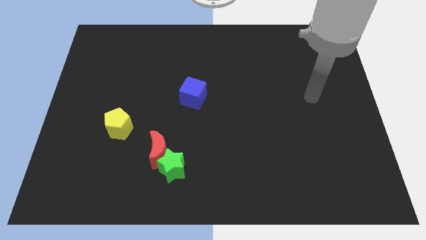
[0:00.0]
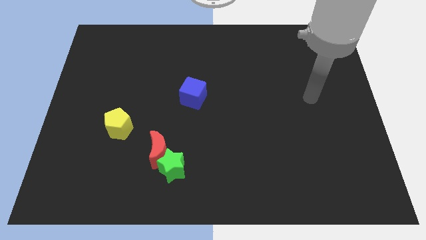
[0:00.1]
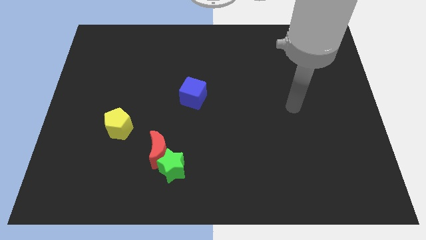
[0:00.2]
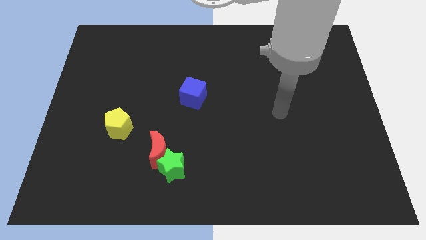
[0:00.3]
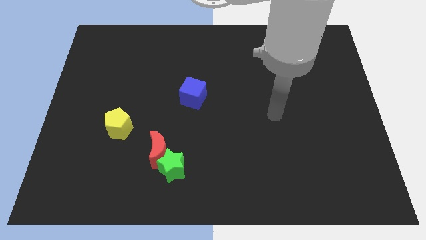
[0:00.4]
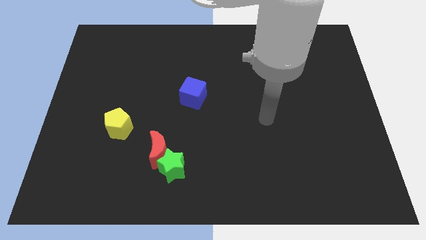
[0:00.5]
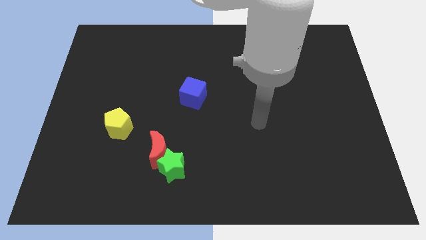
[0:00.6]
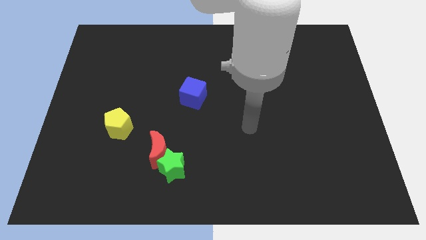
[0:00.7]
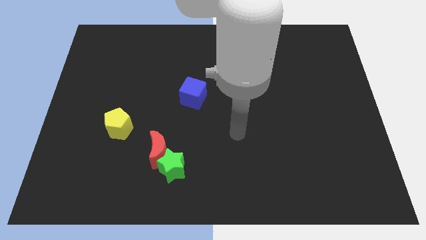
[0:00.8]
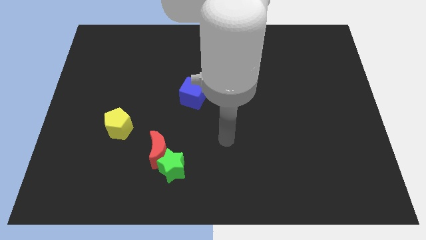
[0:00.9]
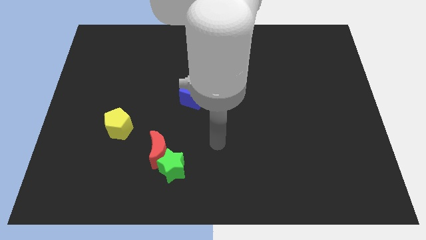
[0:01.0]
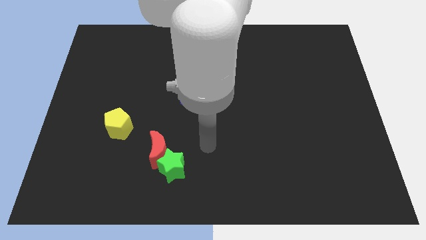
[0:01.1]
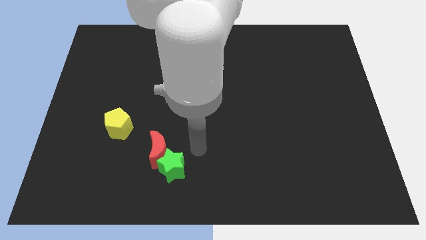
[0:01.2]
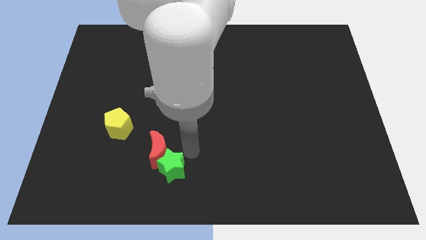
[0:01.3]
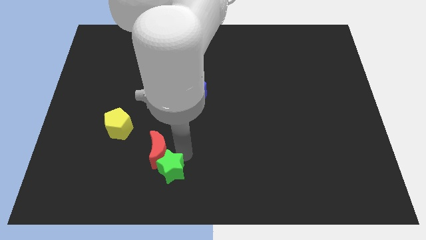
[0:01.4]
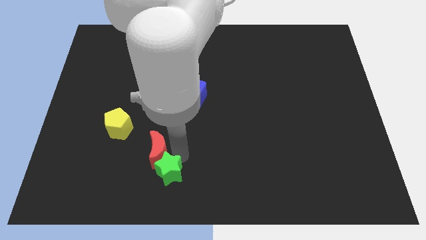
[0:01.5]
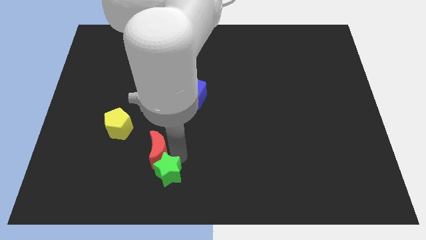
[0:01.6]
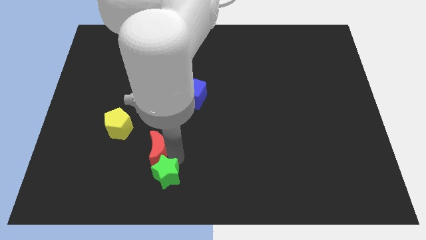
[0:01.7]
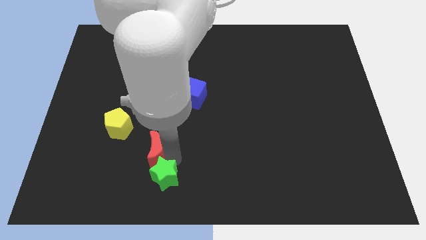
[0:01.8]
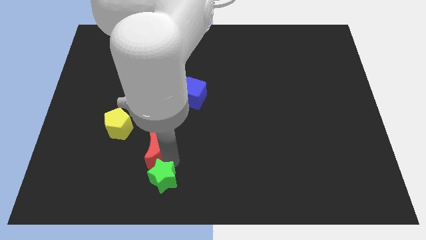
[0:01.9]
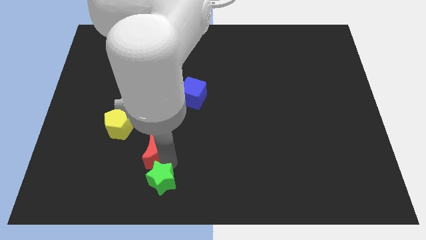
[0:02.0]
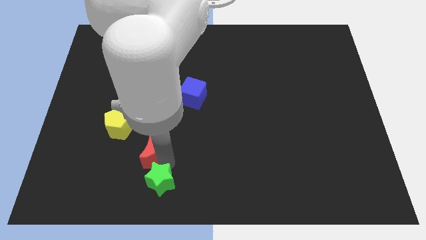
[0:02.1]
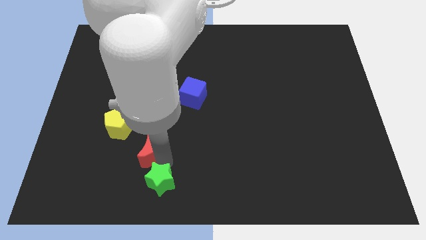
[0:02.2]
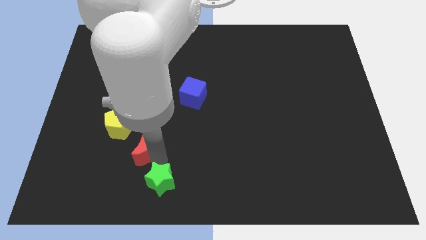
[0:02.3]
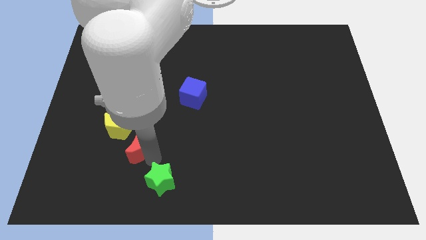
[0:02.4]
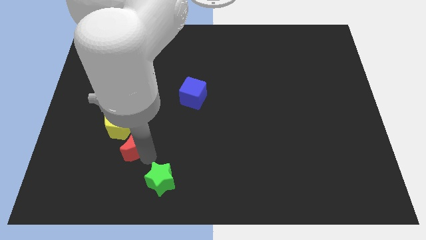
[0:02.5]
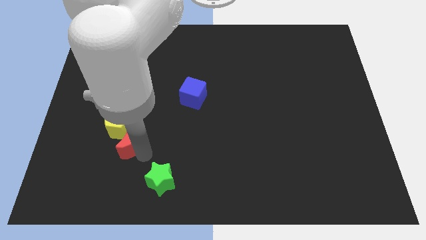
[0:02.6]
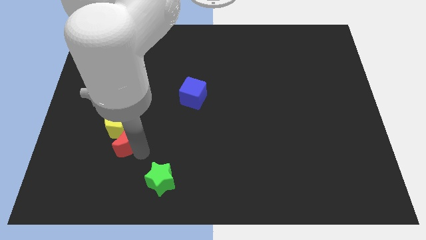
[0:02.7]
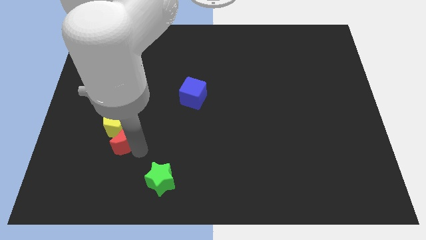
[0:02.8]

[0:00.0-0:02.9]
push the red moon close to the yellow block

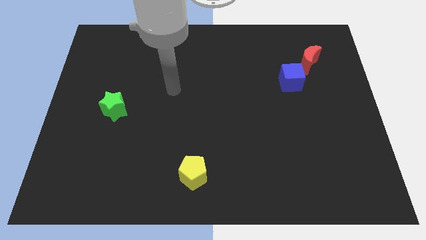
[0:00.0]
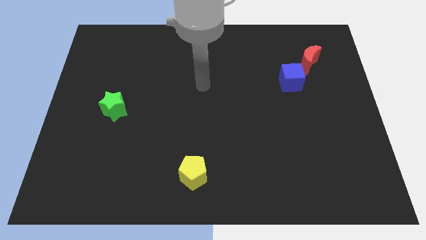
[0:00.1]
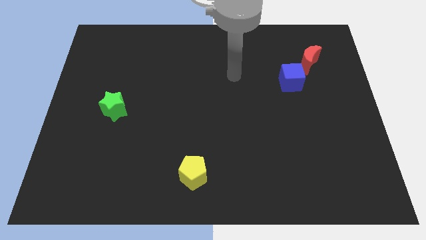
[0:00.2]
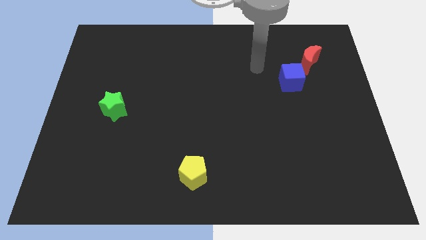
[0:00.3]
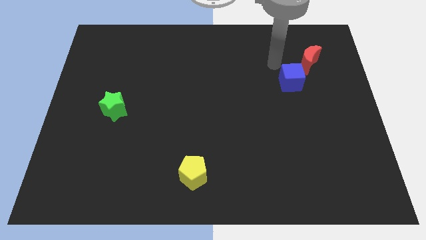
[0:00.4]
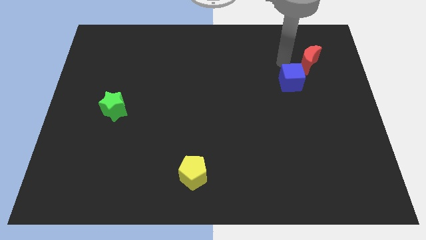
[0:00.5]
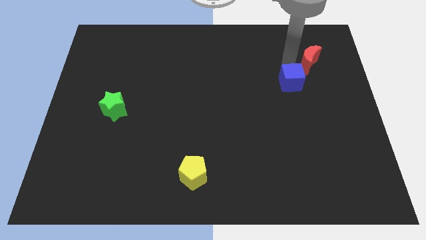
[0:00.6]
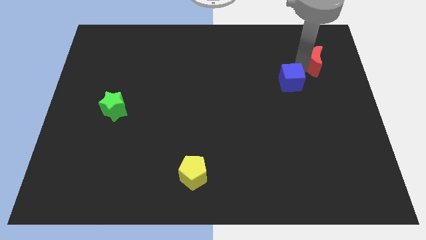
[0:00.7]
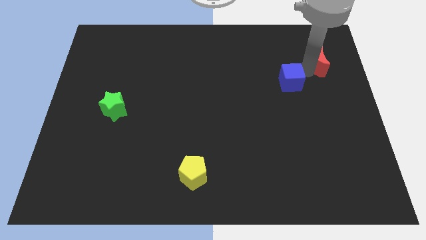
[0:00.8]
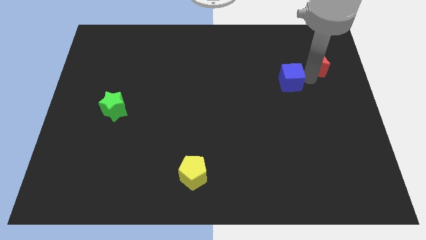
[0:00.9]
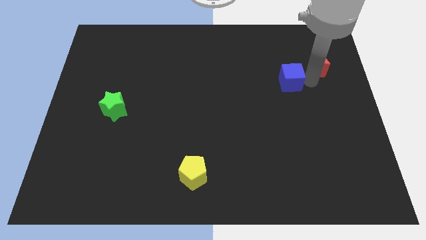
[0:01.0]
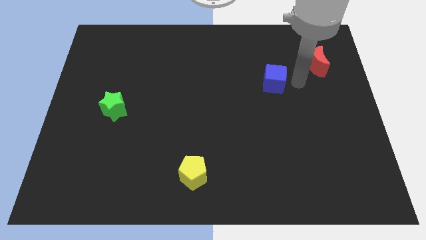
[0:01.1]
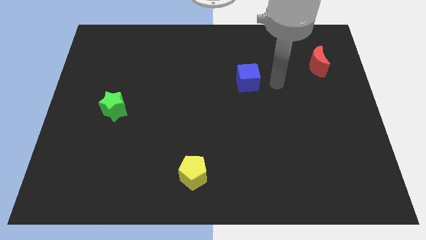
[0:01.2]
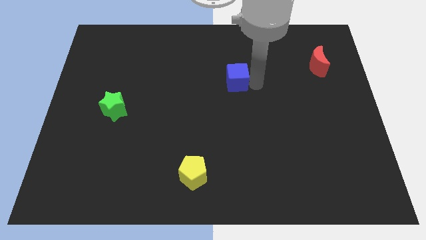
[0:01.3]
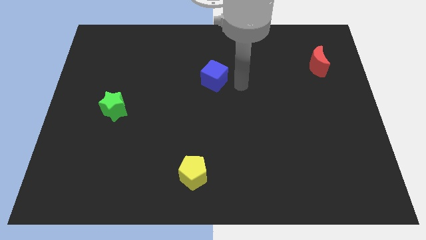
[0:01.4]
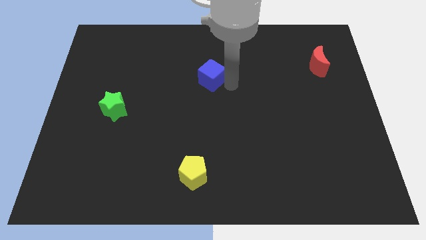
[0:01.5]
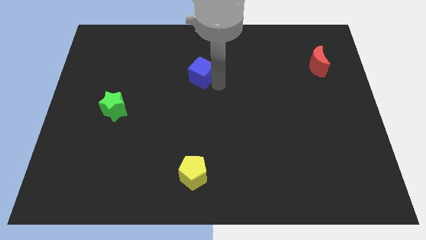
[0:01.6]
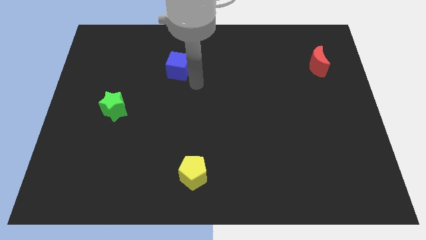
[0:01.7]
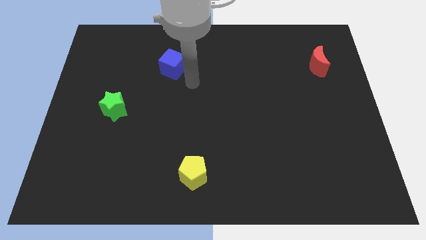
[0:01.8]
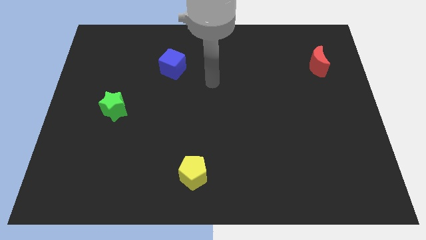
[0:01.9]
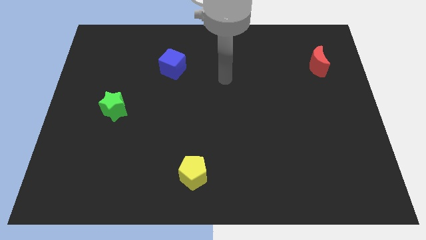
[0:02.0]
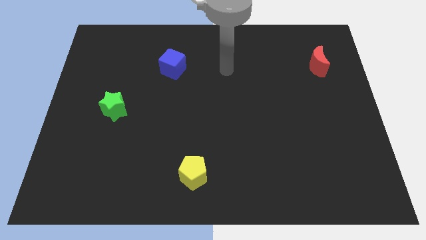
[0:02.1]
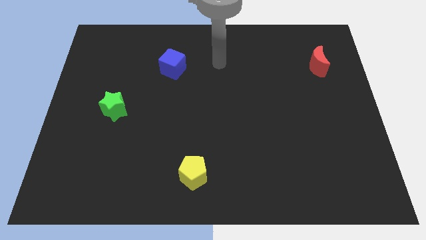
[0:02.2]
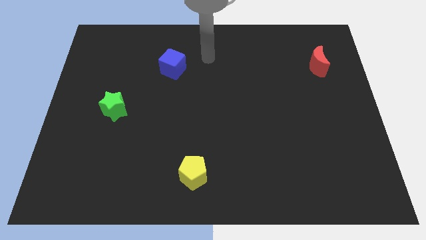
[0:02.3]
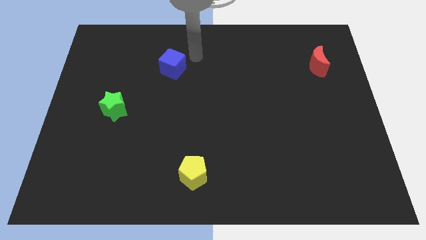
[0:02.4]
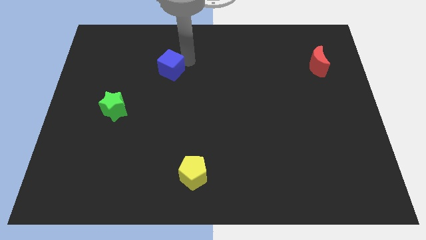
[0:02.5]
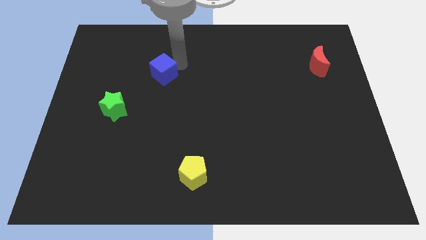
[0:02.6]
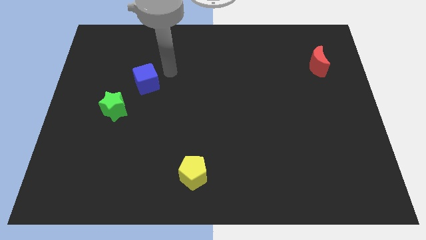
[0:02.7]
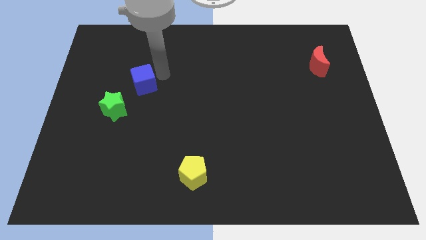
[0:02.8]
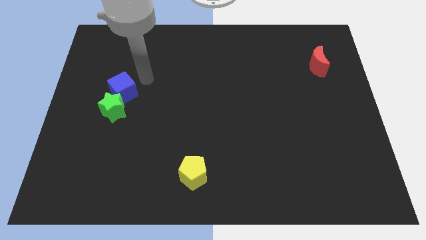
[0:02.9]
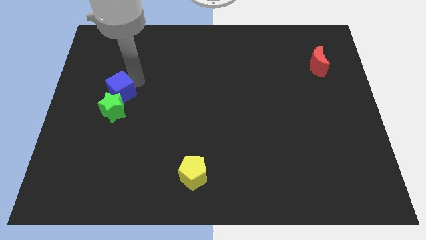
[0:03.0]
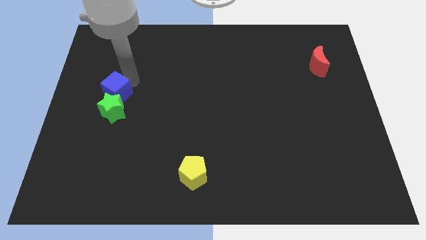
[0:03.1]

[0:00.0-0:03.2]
move the blue cube towards the green block

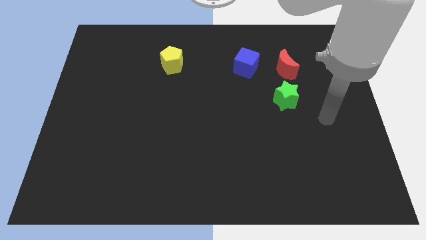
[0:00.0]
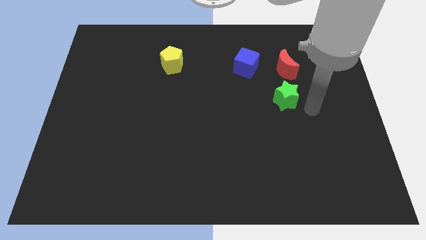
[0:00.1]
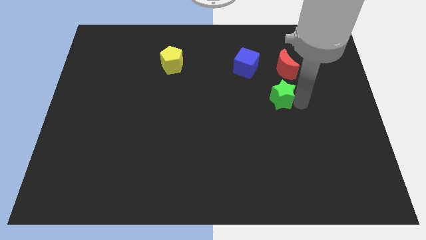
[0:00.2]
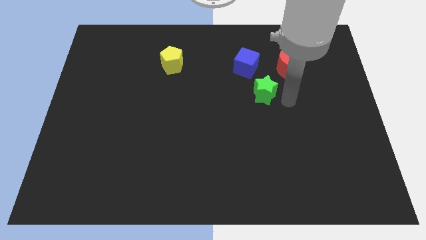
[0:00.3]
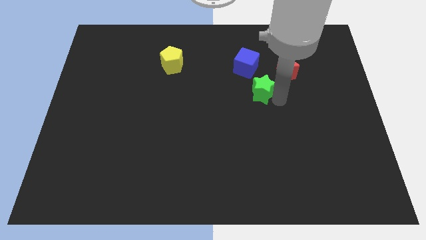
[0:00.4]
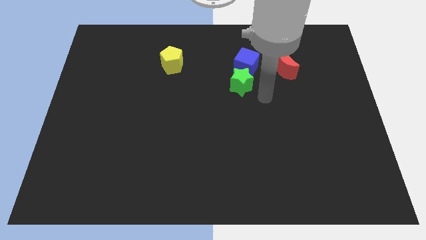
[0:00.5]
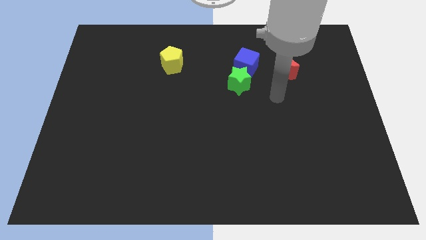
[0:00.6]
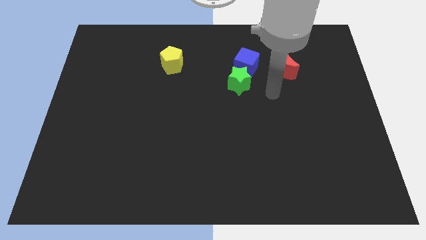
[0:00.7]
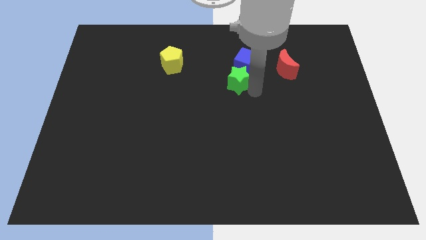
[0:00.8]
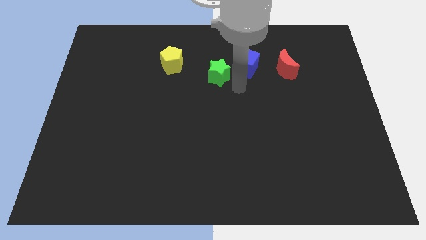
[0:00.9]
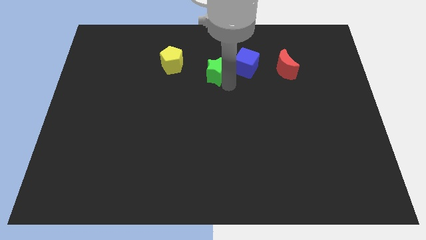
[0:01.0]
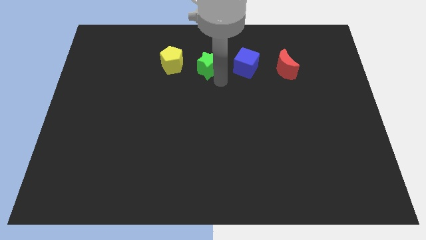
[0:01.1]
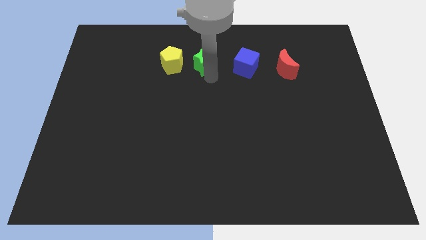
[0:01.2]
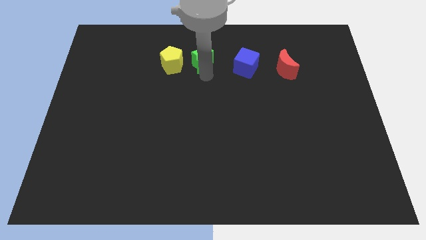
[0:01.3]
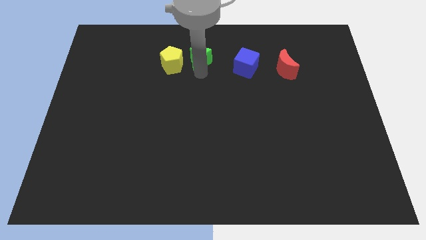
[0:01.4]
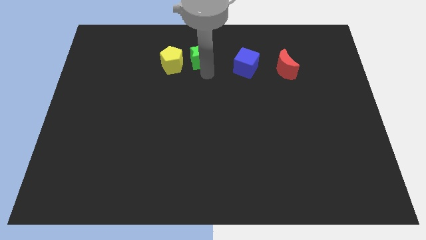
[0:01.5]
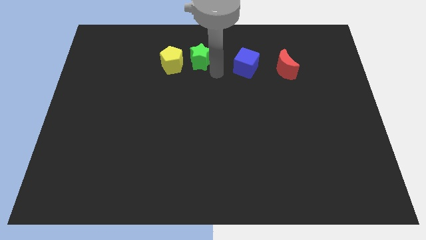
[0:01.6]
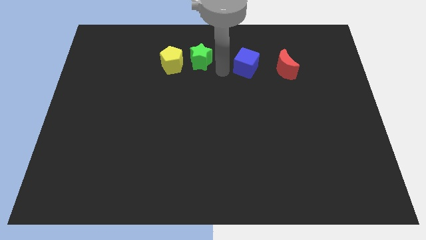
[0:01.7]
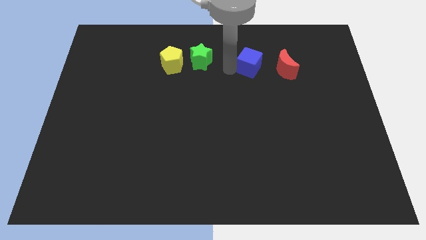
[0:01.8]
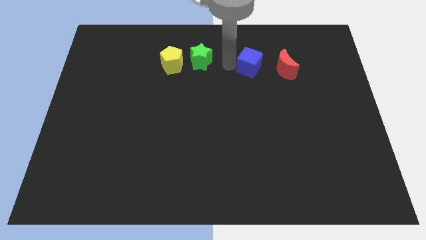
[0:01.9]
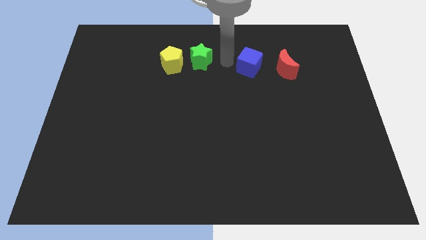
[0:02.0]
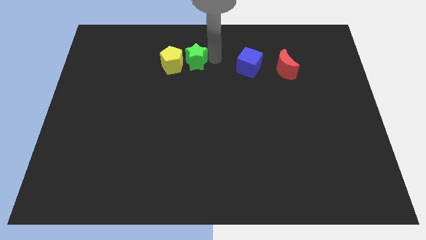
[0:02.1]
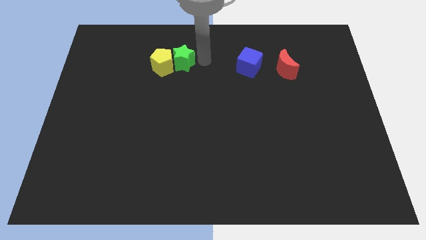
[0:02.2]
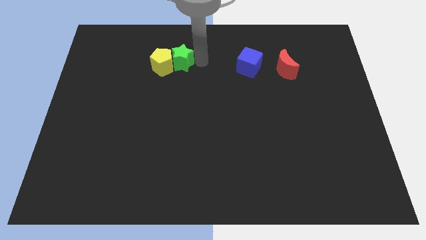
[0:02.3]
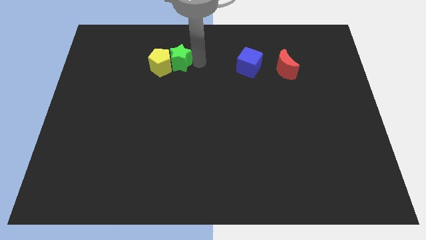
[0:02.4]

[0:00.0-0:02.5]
slide the green block next to the yellow pentagon
